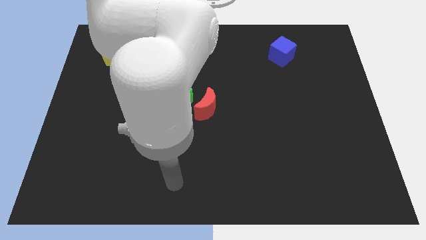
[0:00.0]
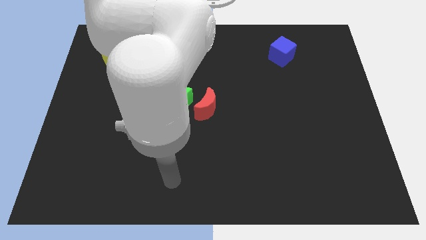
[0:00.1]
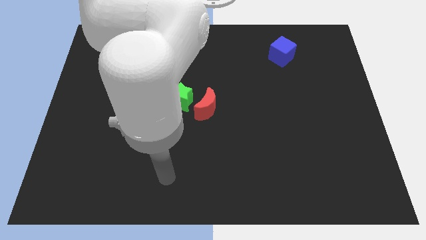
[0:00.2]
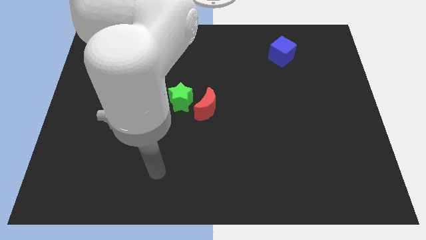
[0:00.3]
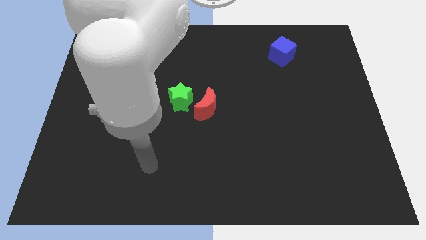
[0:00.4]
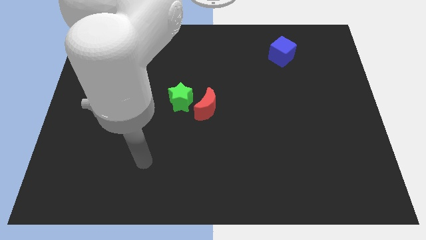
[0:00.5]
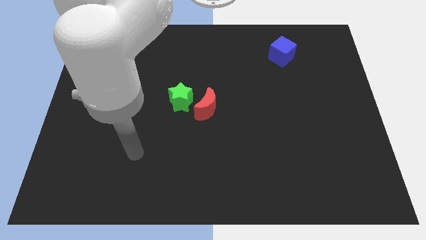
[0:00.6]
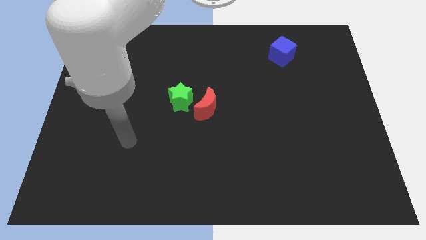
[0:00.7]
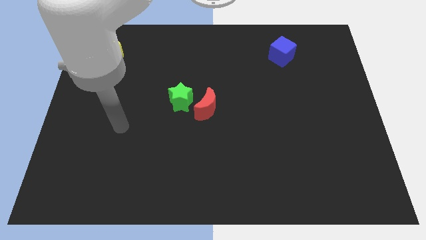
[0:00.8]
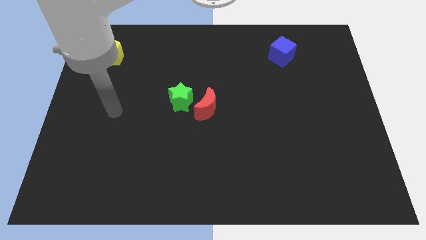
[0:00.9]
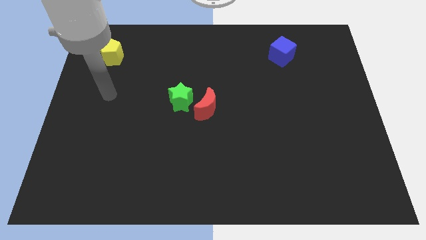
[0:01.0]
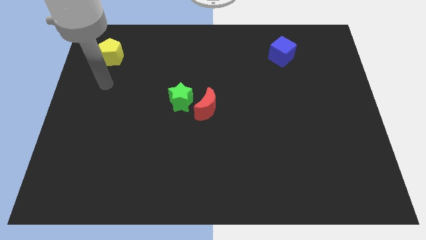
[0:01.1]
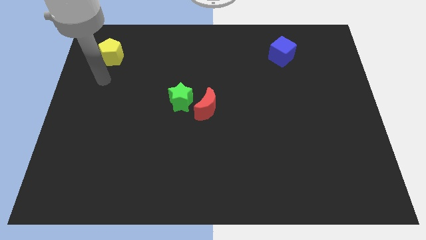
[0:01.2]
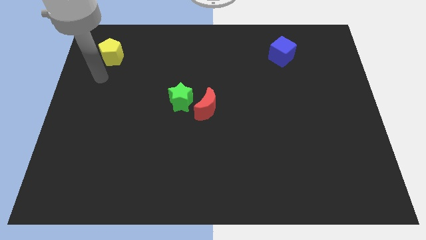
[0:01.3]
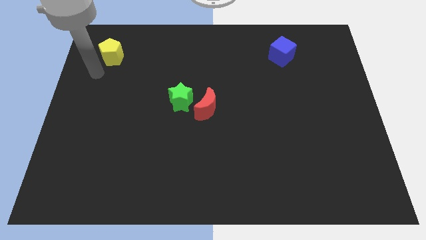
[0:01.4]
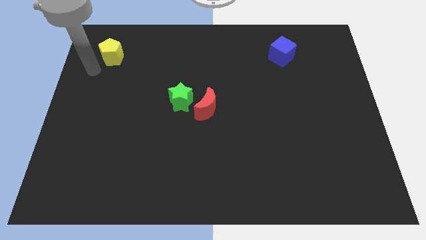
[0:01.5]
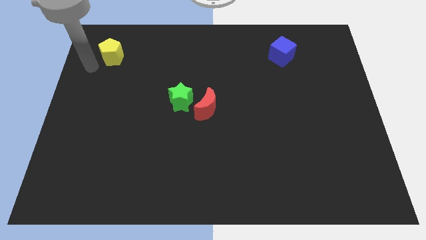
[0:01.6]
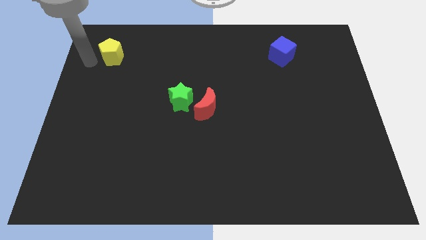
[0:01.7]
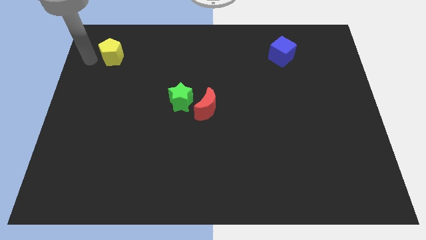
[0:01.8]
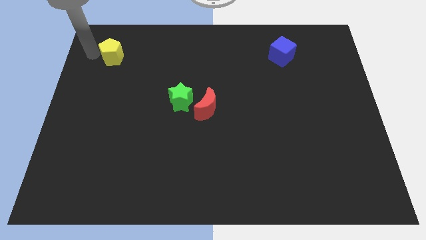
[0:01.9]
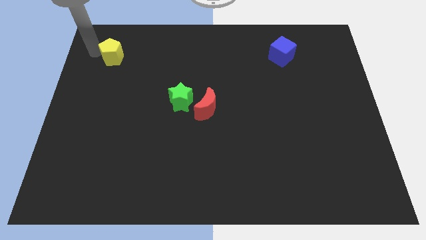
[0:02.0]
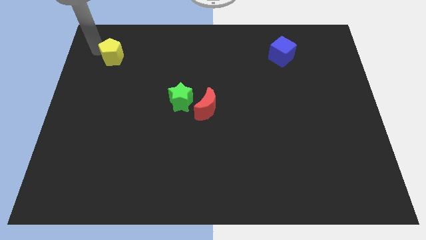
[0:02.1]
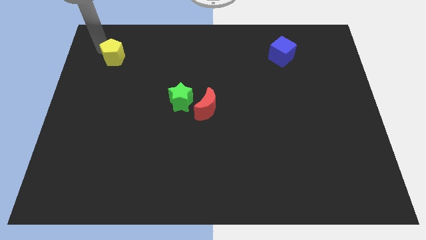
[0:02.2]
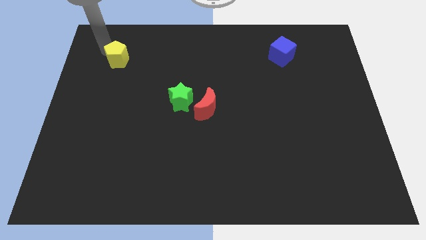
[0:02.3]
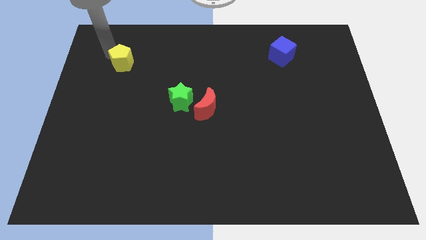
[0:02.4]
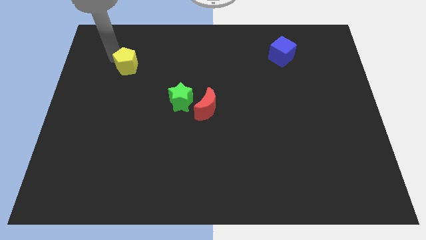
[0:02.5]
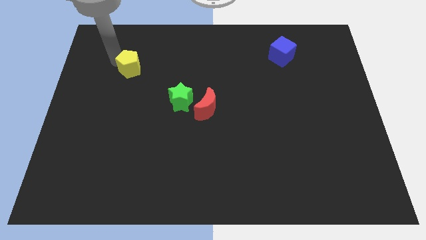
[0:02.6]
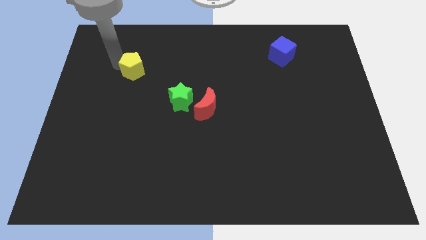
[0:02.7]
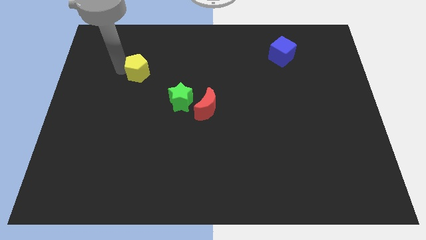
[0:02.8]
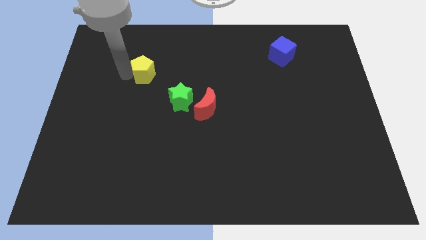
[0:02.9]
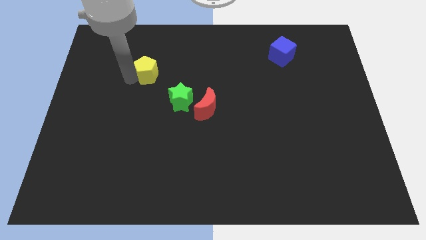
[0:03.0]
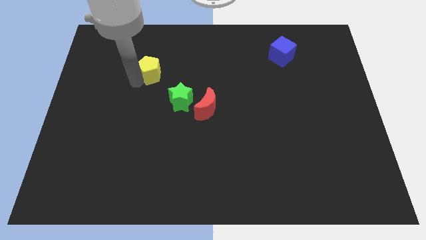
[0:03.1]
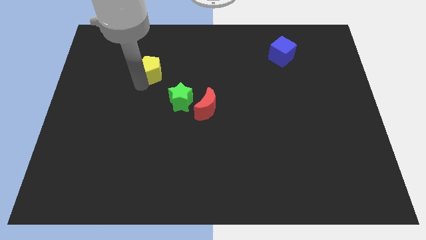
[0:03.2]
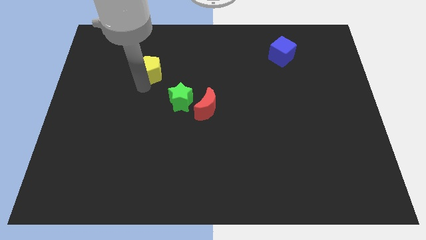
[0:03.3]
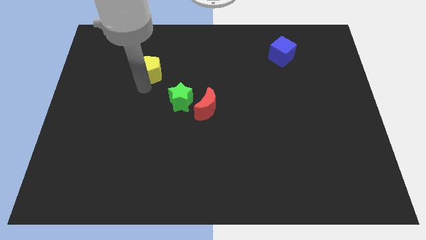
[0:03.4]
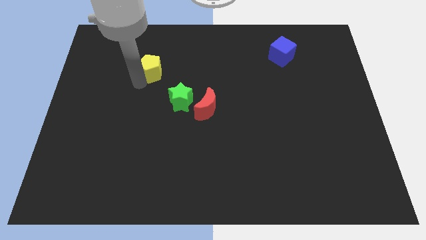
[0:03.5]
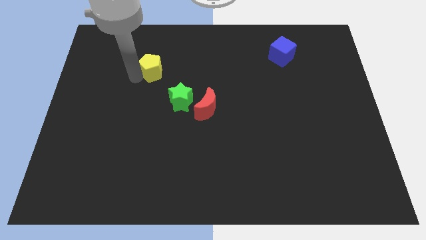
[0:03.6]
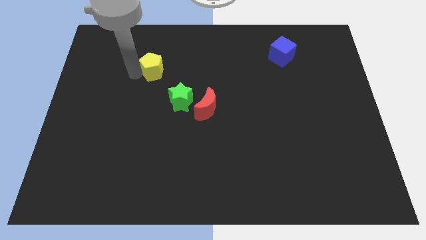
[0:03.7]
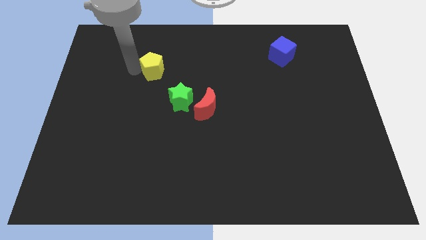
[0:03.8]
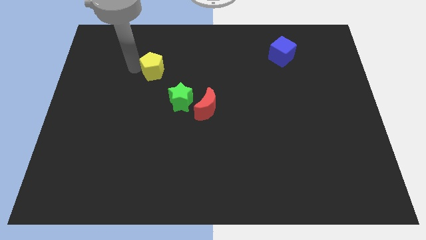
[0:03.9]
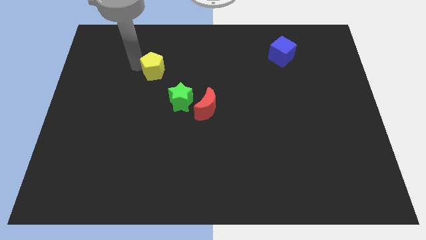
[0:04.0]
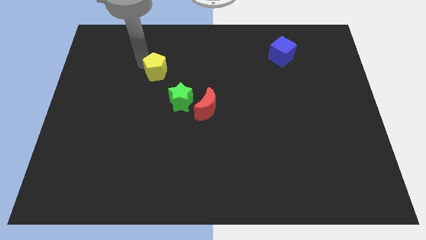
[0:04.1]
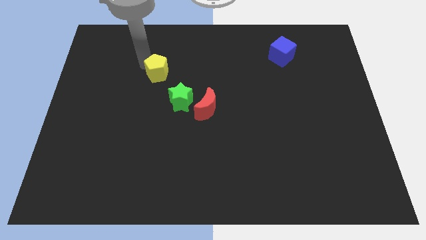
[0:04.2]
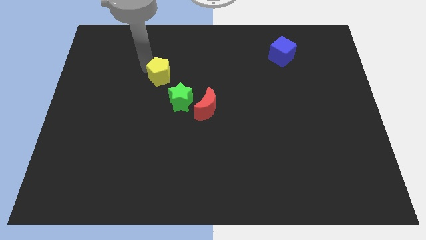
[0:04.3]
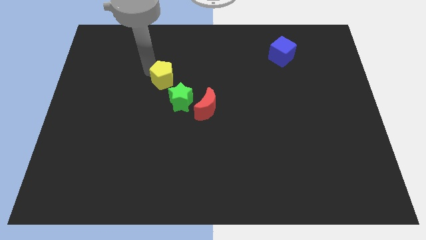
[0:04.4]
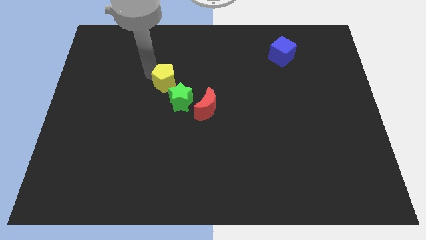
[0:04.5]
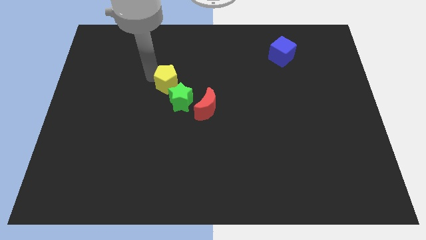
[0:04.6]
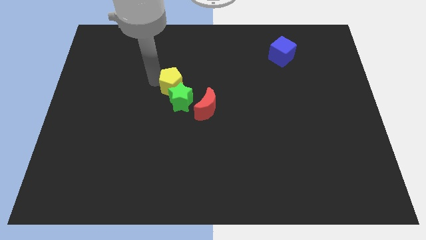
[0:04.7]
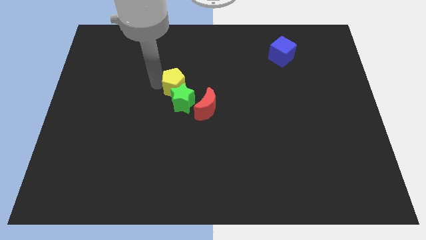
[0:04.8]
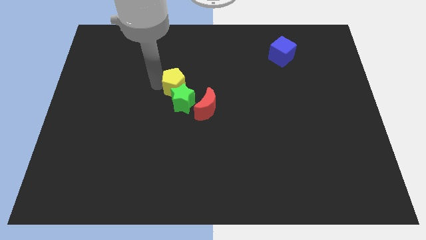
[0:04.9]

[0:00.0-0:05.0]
move the yellow block next to the green star

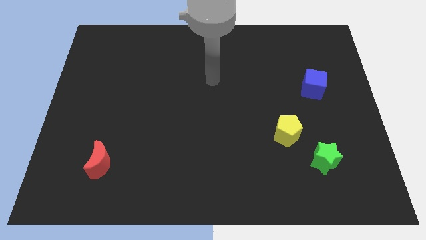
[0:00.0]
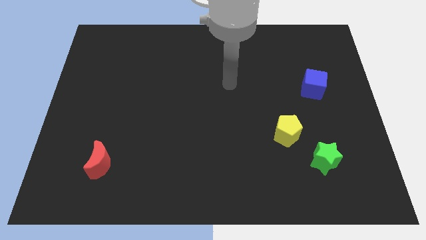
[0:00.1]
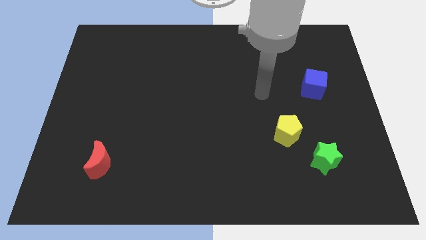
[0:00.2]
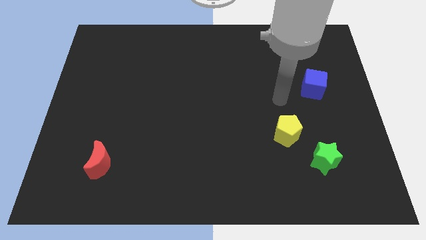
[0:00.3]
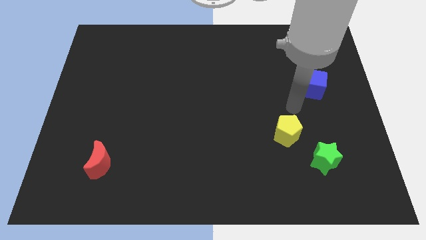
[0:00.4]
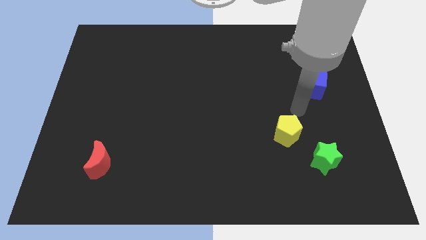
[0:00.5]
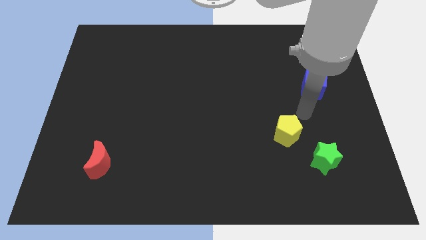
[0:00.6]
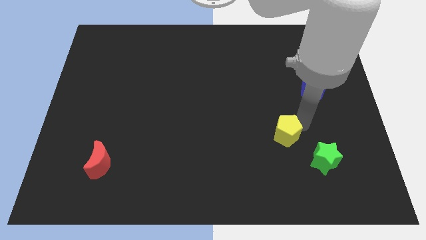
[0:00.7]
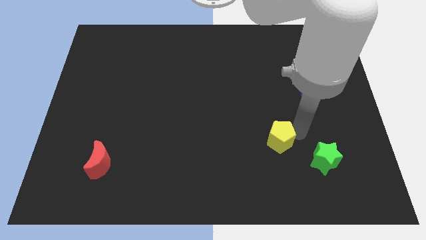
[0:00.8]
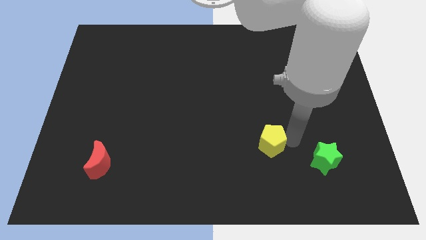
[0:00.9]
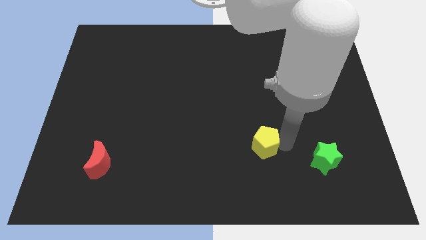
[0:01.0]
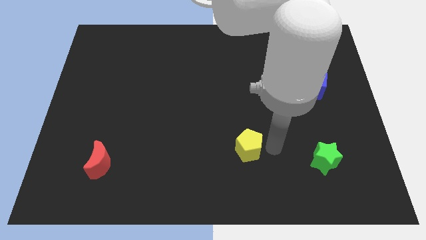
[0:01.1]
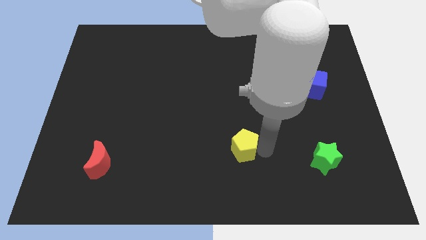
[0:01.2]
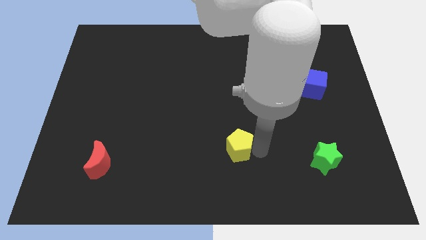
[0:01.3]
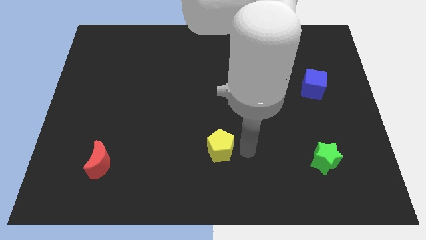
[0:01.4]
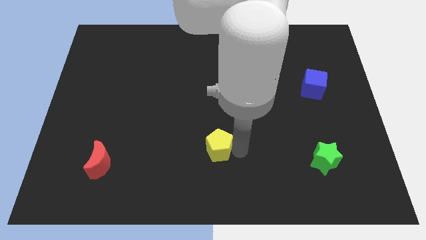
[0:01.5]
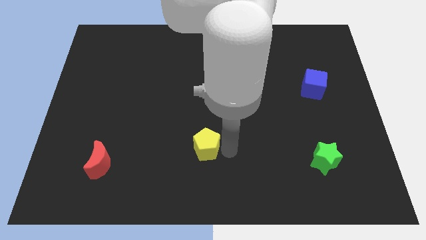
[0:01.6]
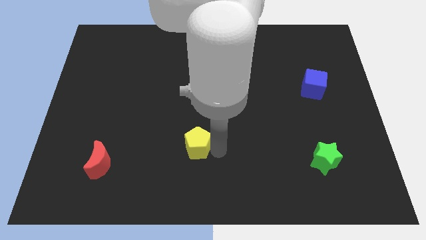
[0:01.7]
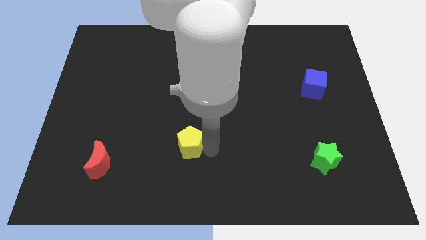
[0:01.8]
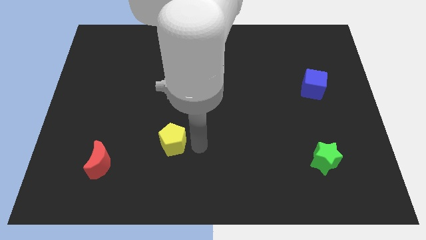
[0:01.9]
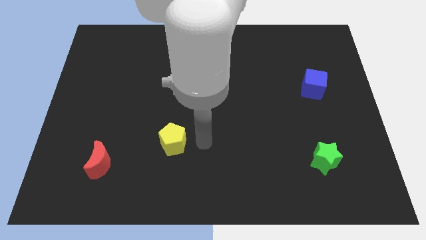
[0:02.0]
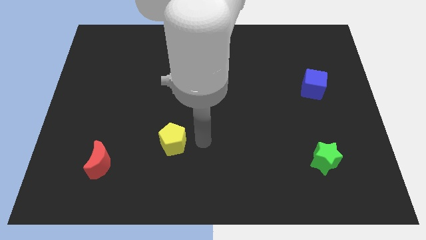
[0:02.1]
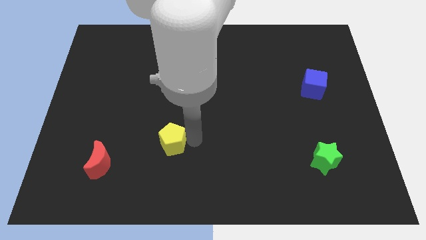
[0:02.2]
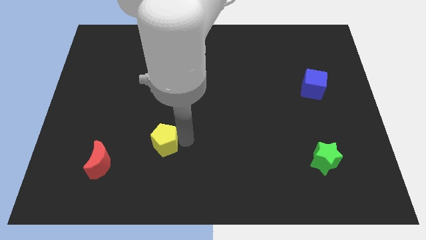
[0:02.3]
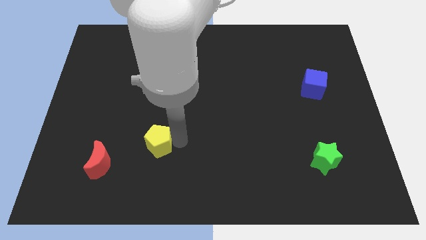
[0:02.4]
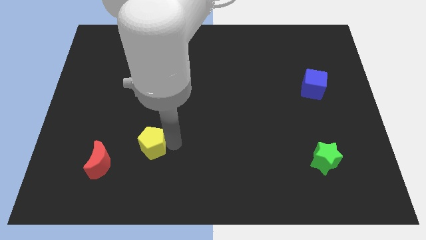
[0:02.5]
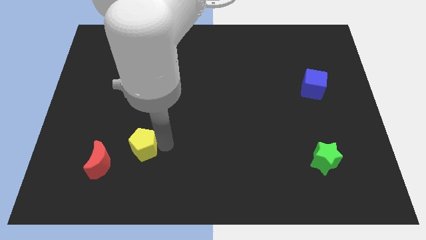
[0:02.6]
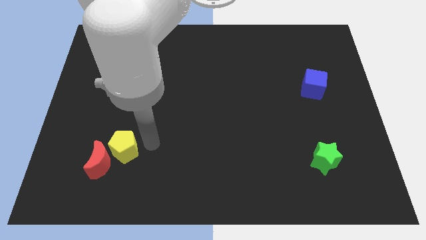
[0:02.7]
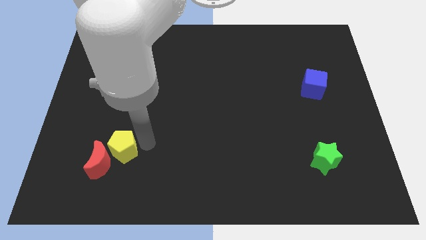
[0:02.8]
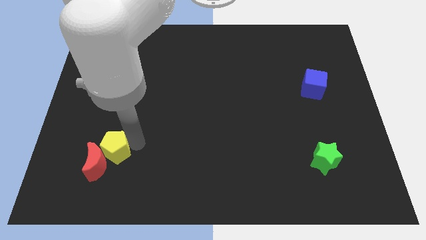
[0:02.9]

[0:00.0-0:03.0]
put the yellow block to the red block

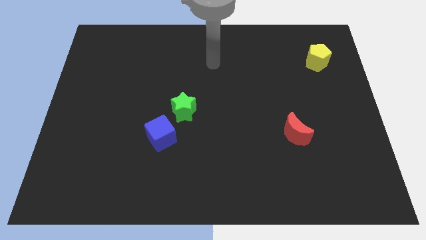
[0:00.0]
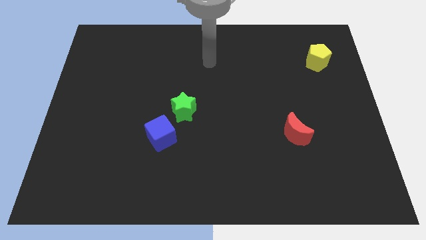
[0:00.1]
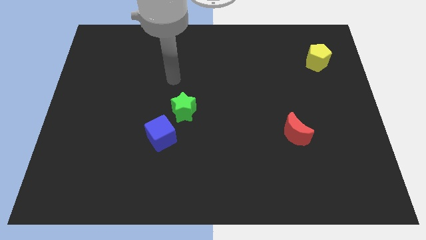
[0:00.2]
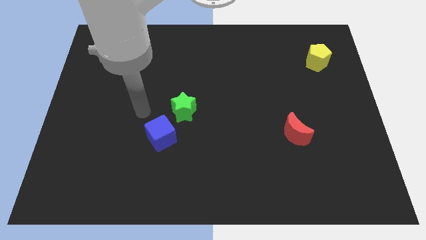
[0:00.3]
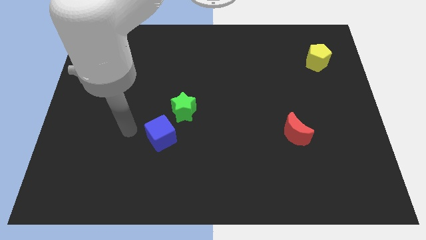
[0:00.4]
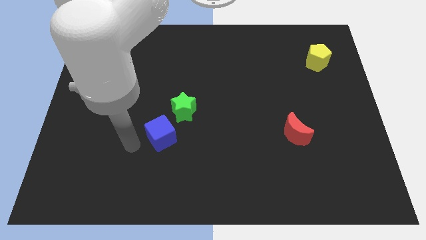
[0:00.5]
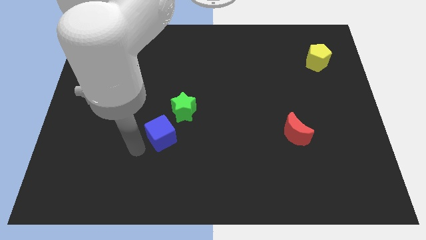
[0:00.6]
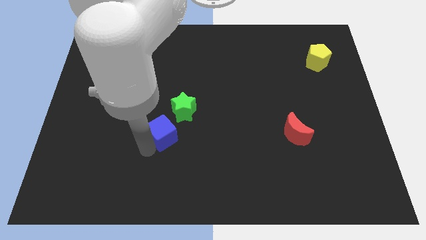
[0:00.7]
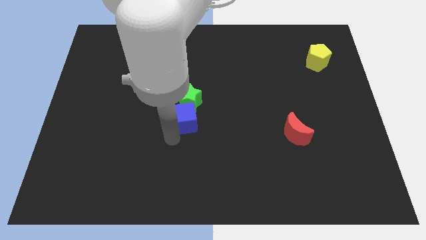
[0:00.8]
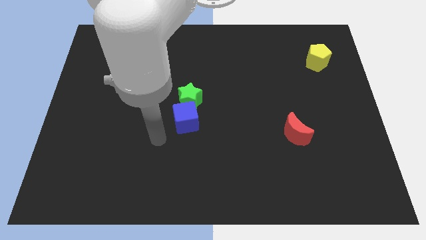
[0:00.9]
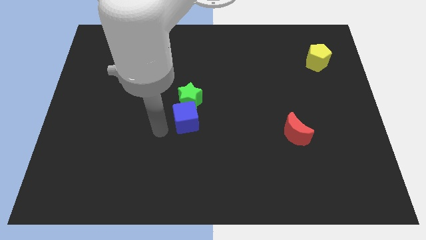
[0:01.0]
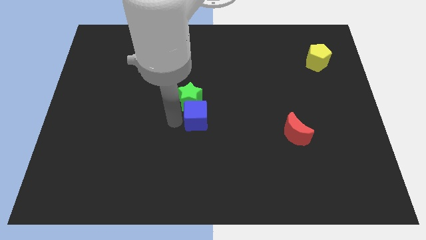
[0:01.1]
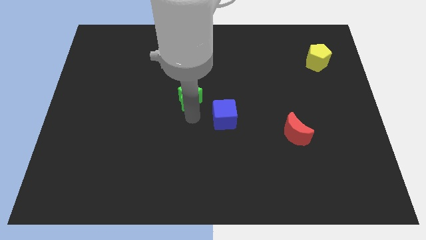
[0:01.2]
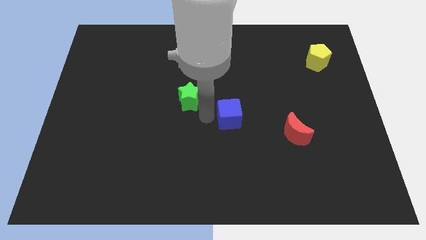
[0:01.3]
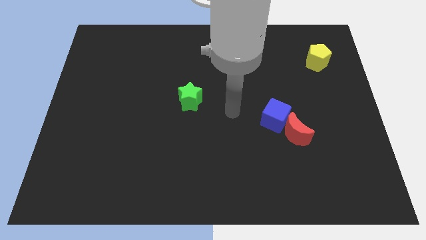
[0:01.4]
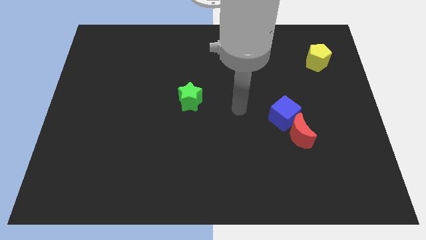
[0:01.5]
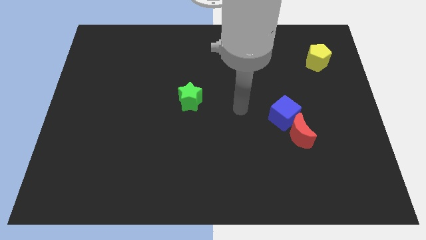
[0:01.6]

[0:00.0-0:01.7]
move the cube next to the red block
